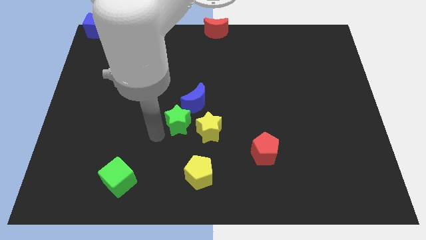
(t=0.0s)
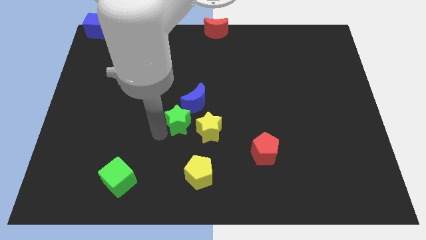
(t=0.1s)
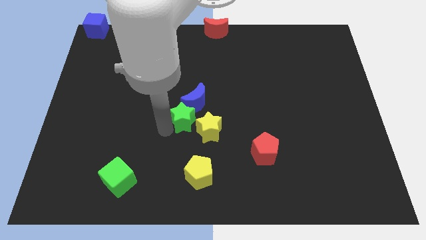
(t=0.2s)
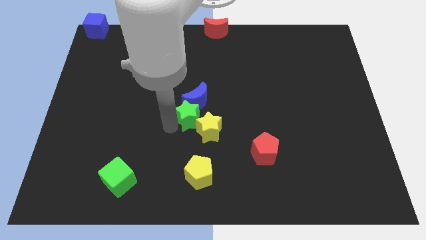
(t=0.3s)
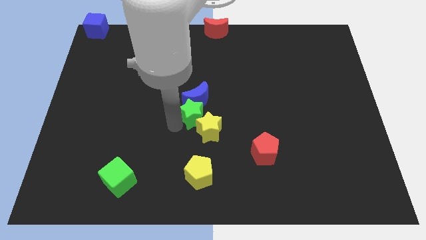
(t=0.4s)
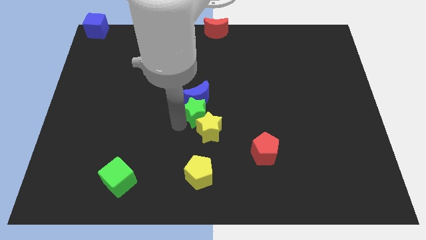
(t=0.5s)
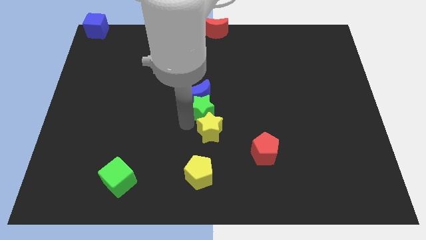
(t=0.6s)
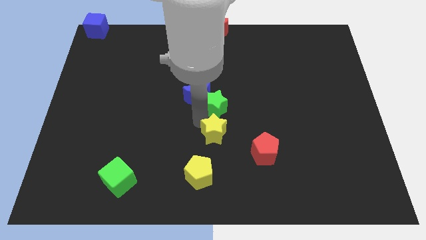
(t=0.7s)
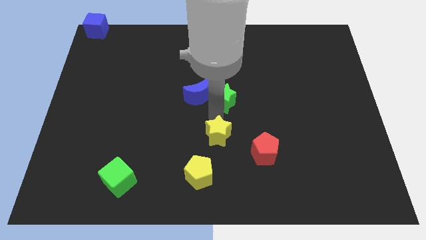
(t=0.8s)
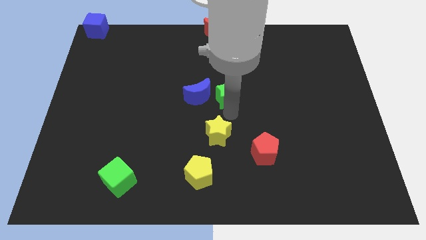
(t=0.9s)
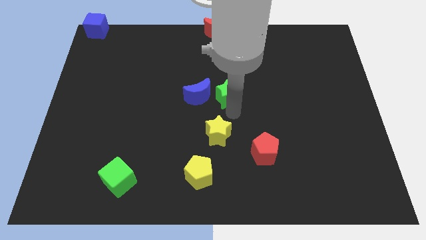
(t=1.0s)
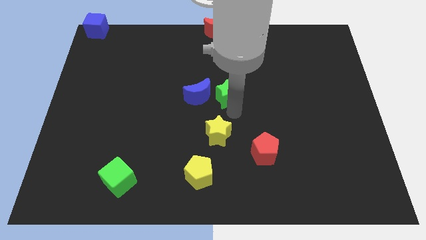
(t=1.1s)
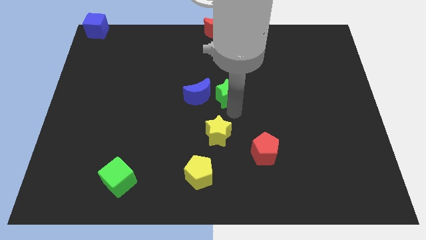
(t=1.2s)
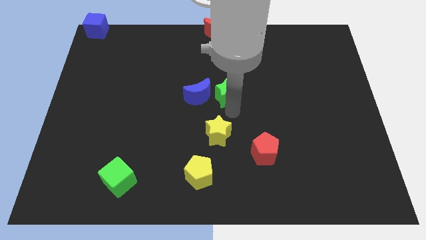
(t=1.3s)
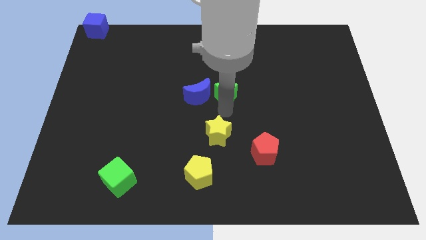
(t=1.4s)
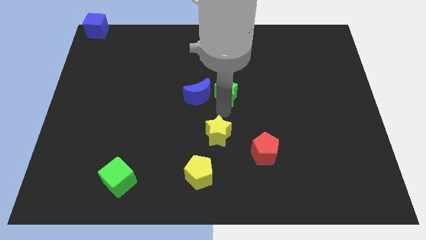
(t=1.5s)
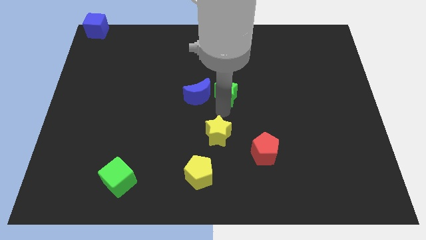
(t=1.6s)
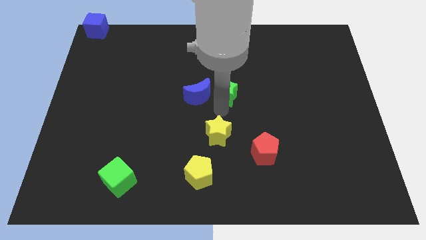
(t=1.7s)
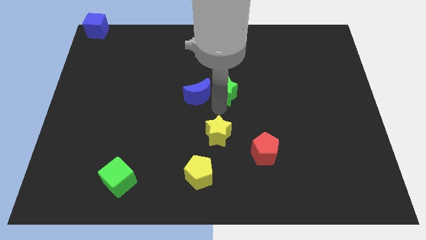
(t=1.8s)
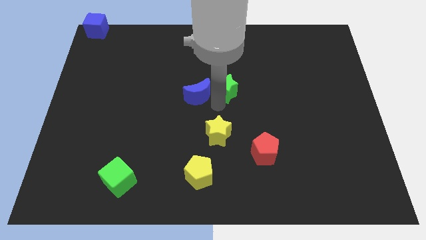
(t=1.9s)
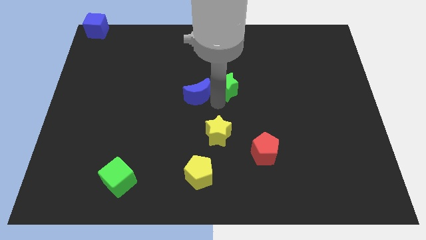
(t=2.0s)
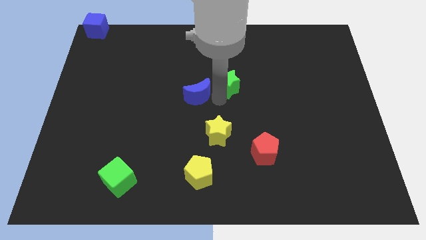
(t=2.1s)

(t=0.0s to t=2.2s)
move the green star to the right of the blue crescent

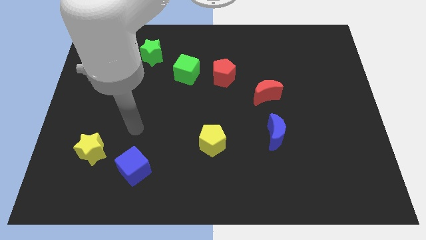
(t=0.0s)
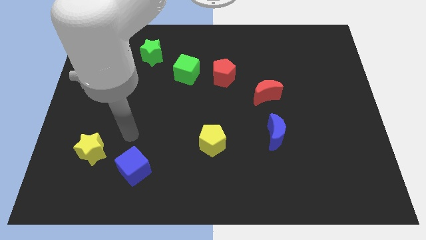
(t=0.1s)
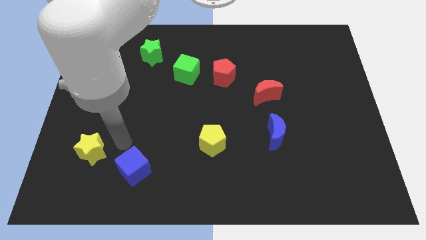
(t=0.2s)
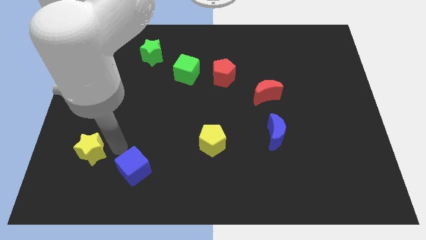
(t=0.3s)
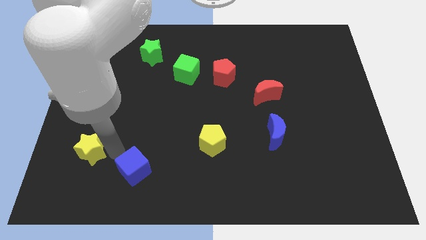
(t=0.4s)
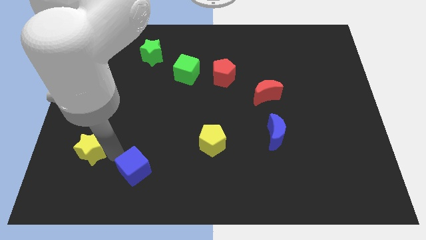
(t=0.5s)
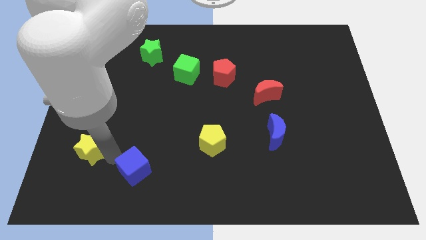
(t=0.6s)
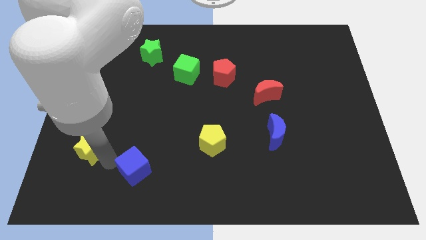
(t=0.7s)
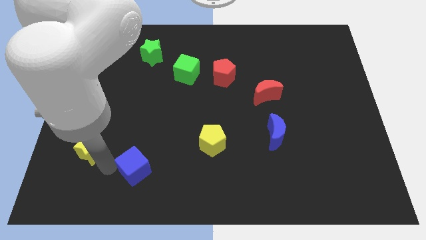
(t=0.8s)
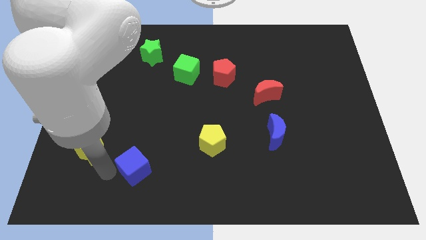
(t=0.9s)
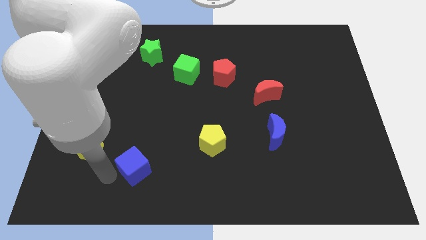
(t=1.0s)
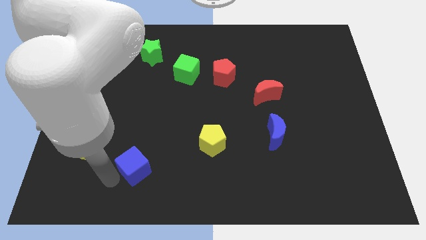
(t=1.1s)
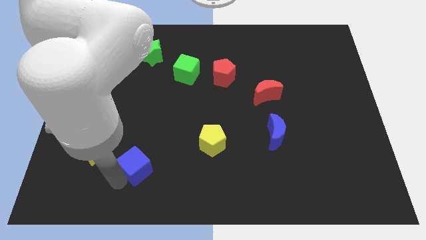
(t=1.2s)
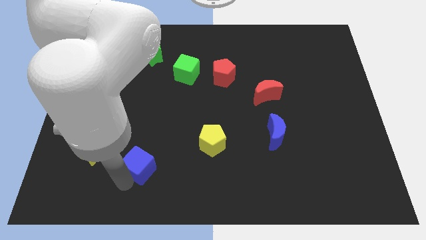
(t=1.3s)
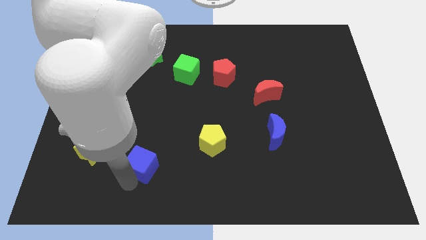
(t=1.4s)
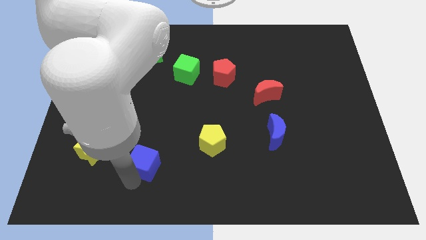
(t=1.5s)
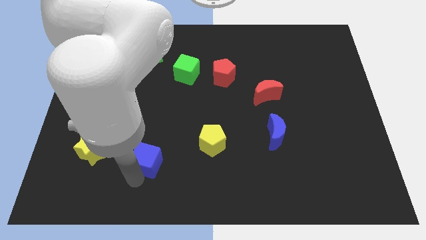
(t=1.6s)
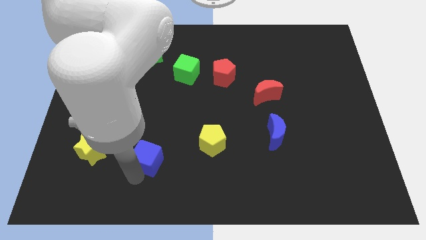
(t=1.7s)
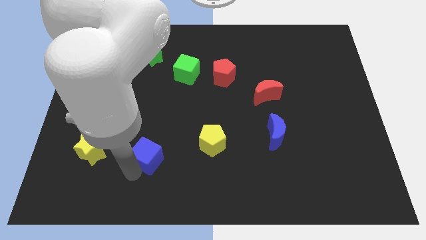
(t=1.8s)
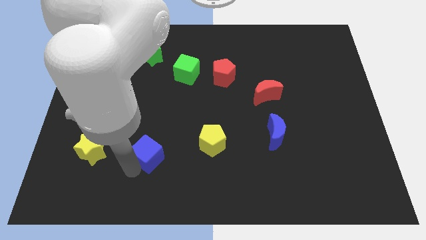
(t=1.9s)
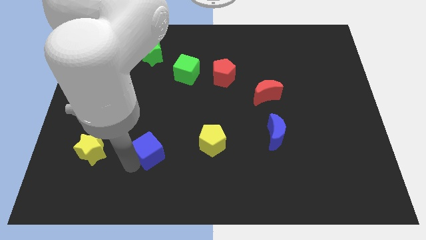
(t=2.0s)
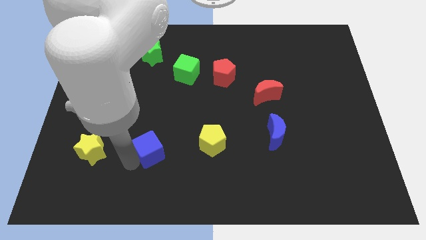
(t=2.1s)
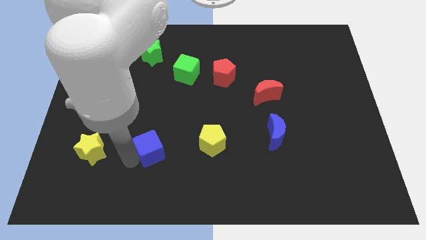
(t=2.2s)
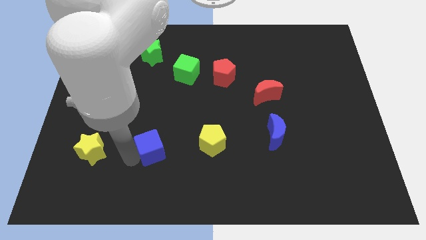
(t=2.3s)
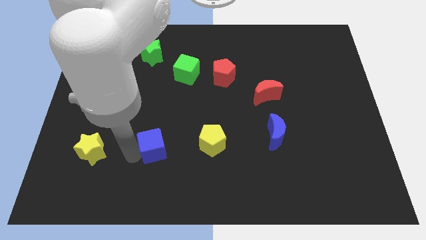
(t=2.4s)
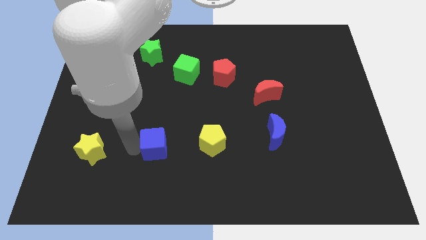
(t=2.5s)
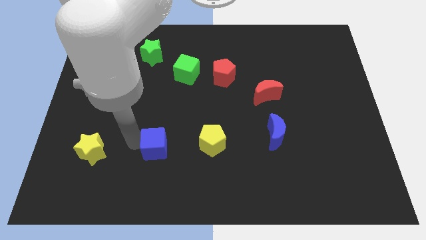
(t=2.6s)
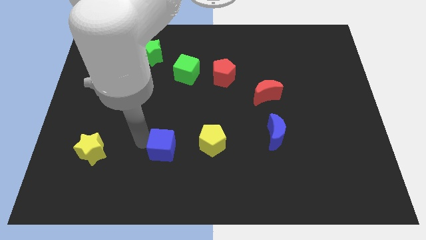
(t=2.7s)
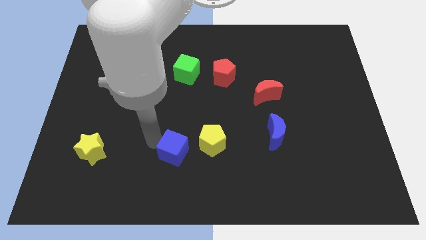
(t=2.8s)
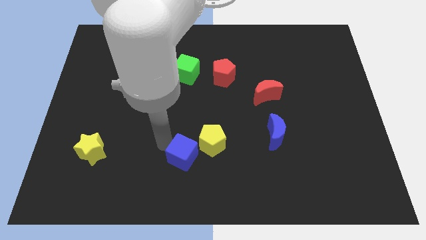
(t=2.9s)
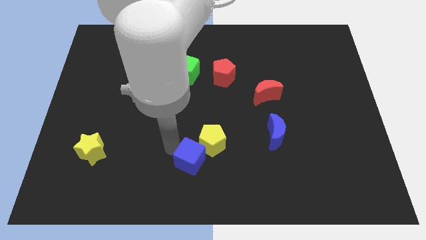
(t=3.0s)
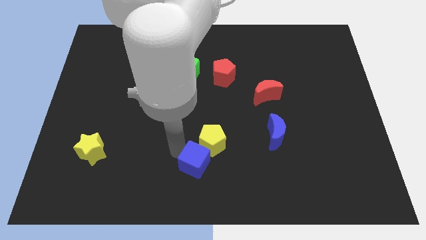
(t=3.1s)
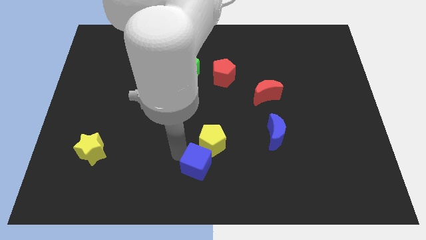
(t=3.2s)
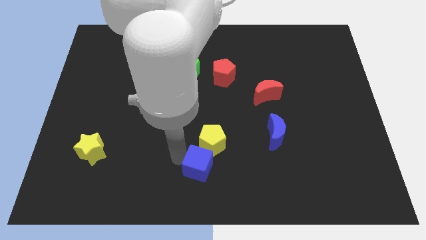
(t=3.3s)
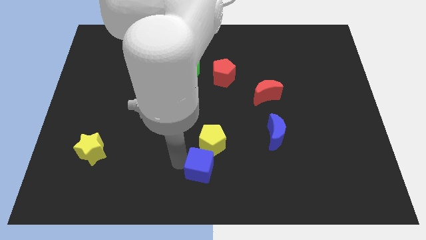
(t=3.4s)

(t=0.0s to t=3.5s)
place the blue cube below to the yellow pentagon

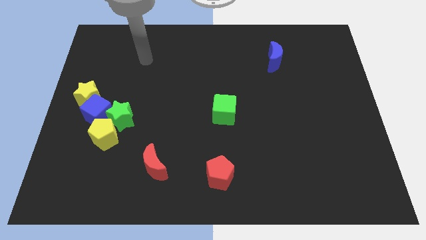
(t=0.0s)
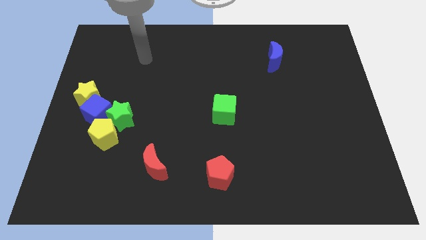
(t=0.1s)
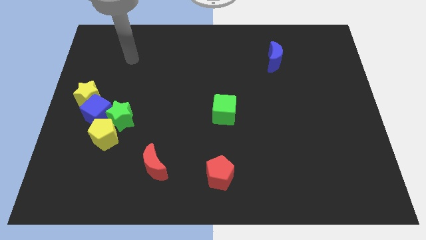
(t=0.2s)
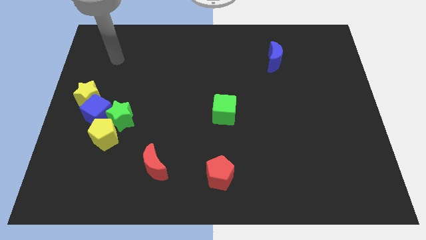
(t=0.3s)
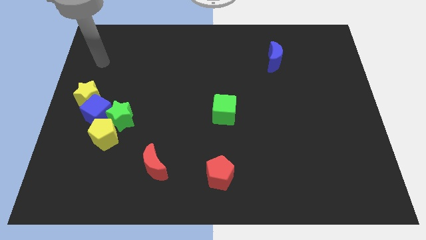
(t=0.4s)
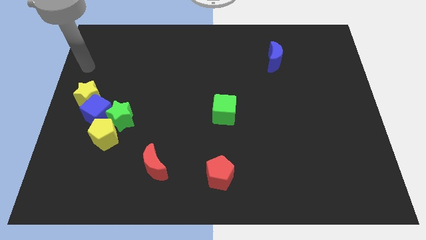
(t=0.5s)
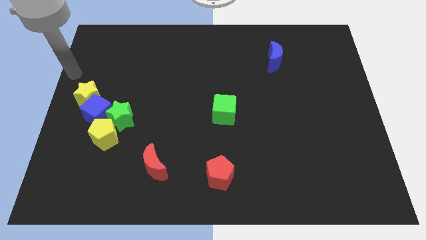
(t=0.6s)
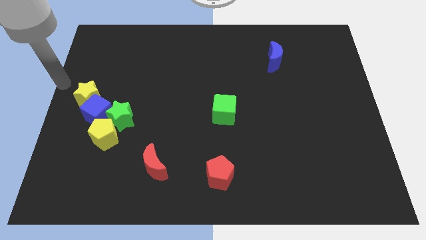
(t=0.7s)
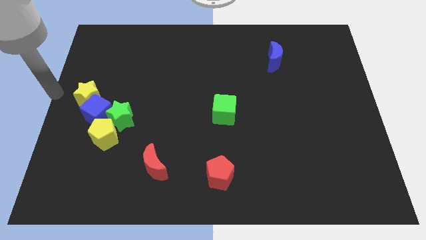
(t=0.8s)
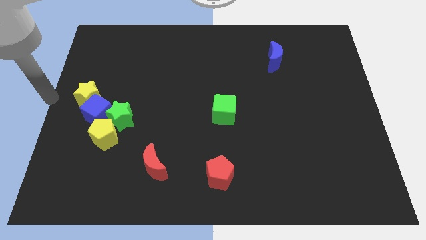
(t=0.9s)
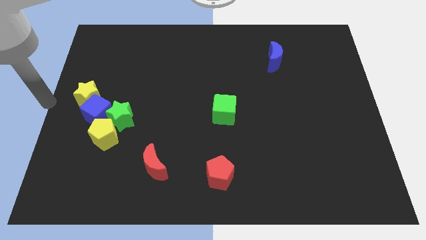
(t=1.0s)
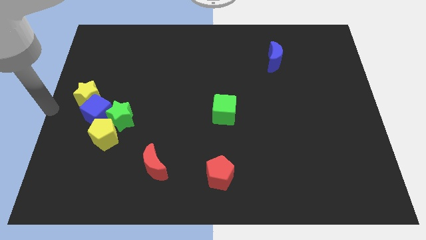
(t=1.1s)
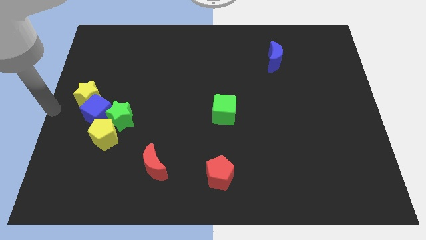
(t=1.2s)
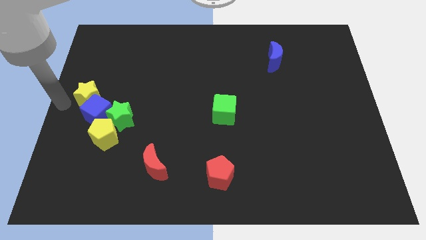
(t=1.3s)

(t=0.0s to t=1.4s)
move your arm to the left side of the yellow star

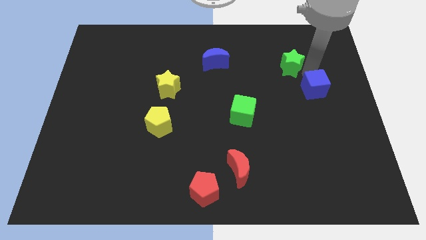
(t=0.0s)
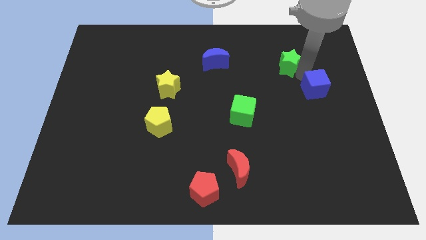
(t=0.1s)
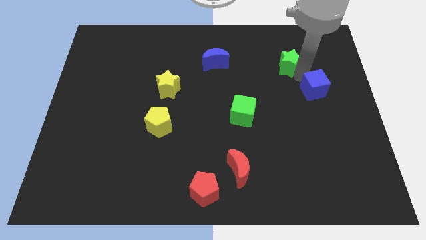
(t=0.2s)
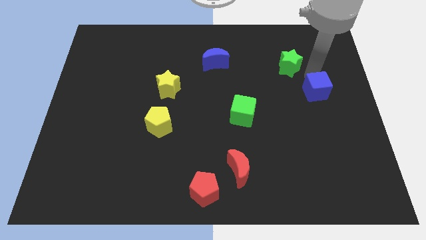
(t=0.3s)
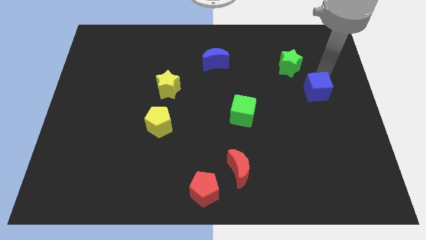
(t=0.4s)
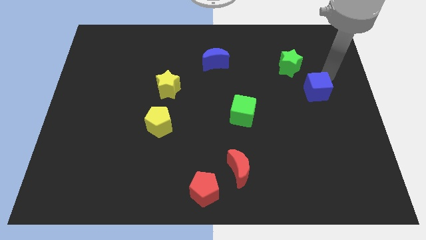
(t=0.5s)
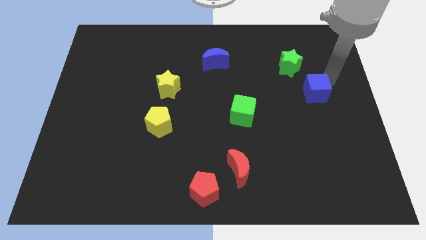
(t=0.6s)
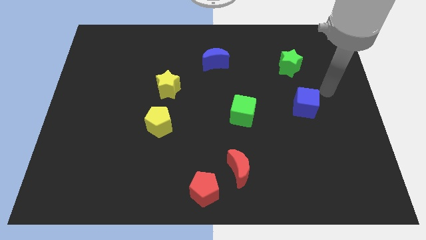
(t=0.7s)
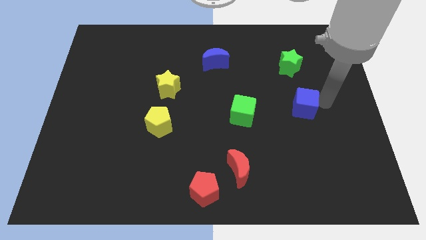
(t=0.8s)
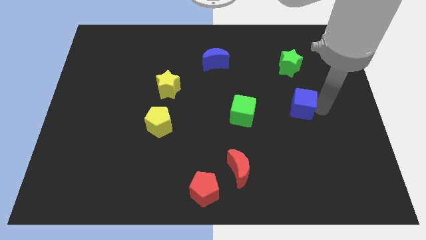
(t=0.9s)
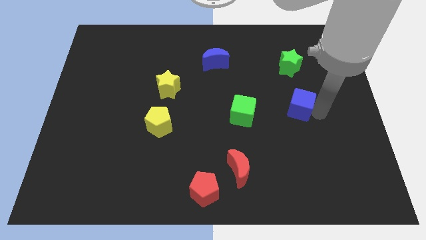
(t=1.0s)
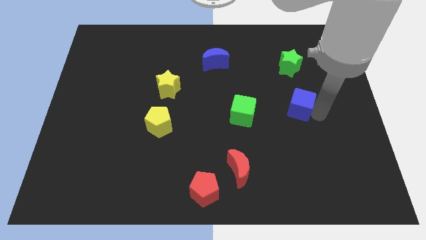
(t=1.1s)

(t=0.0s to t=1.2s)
place blue cube below green star

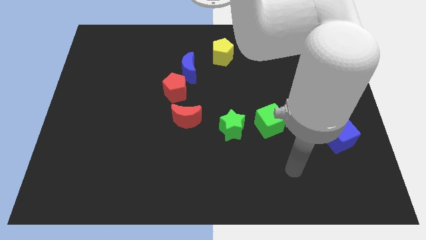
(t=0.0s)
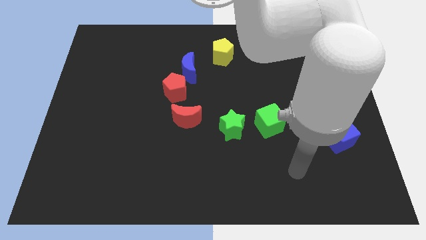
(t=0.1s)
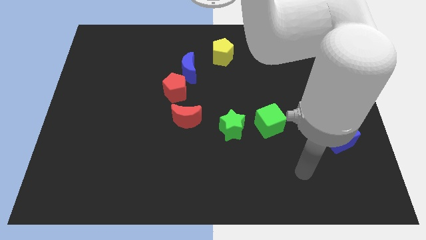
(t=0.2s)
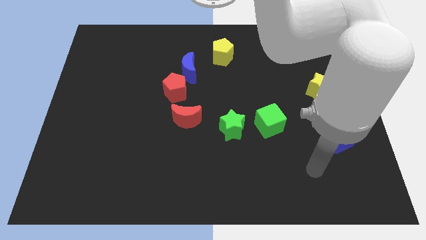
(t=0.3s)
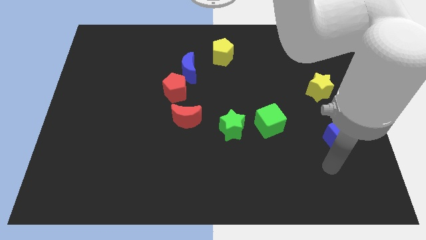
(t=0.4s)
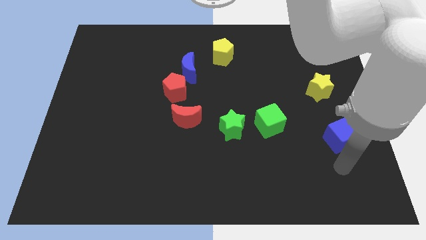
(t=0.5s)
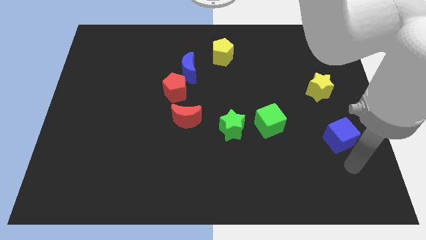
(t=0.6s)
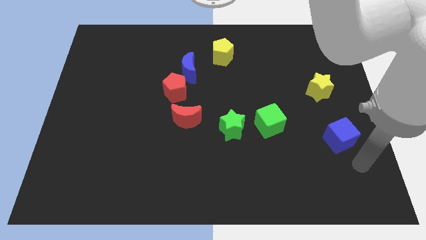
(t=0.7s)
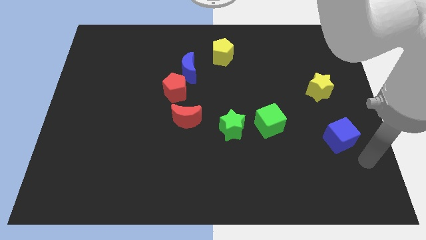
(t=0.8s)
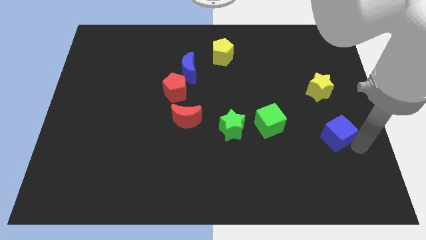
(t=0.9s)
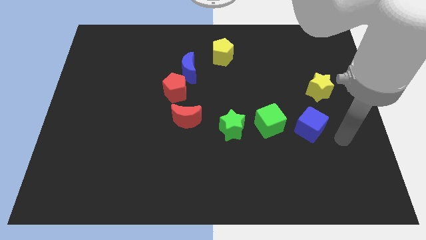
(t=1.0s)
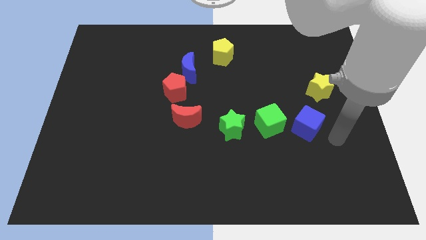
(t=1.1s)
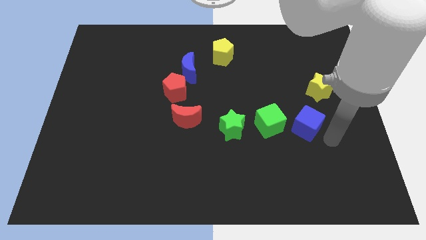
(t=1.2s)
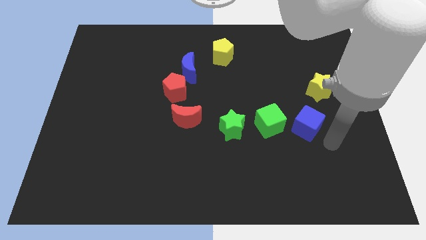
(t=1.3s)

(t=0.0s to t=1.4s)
move the blue cube to the right side of the green cube
